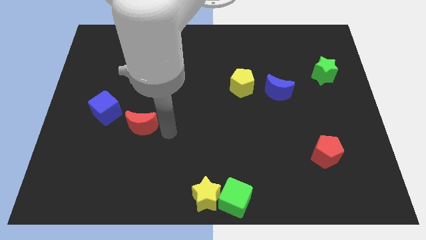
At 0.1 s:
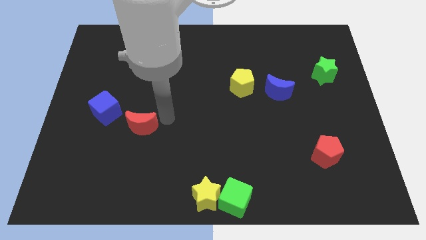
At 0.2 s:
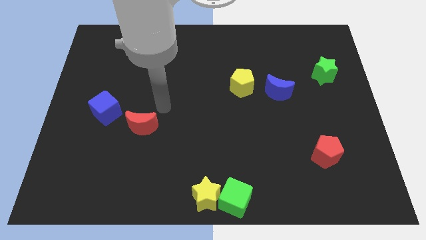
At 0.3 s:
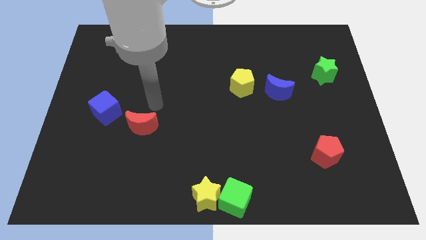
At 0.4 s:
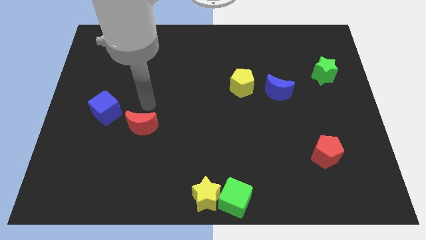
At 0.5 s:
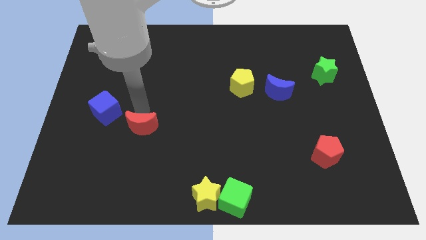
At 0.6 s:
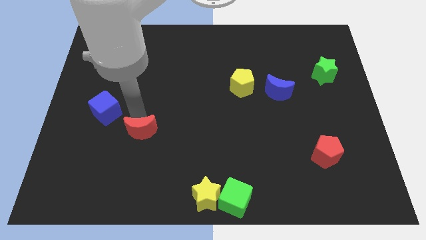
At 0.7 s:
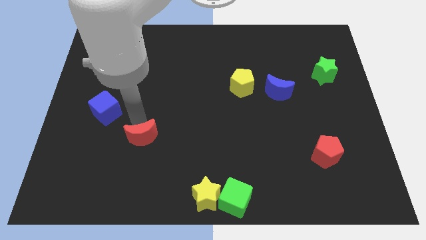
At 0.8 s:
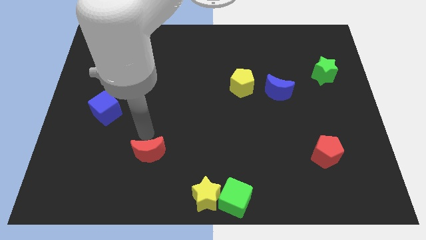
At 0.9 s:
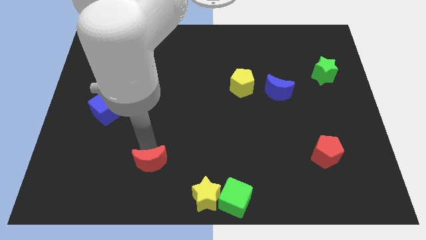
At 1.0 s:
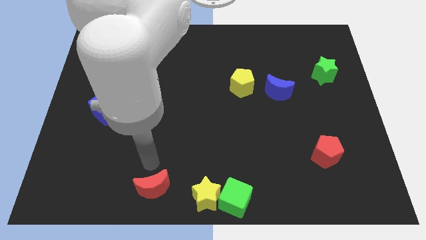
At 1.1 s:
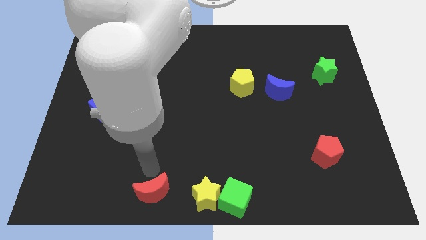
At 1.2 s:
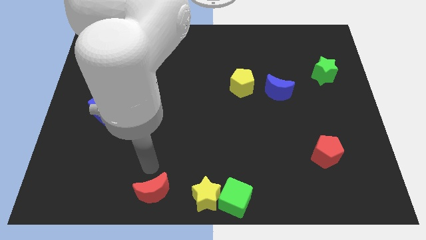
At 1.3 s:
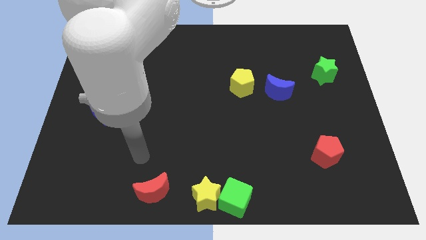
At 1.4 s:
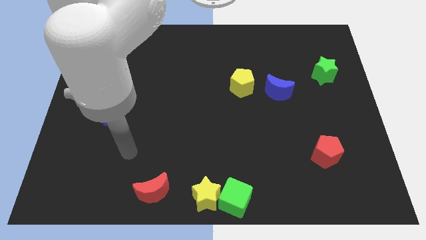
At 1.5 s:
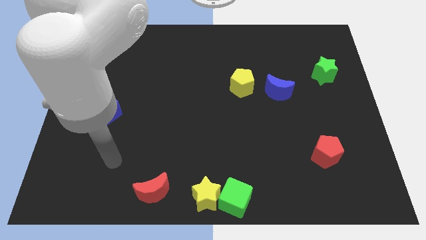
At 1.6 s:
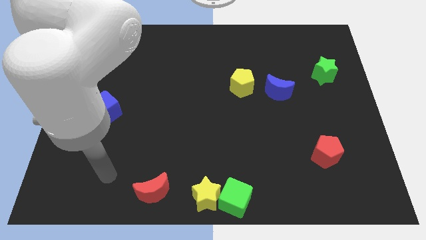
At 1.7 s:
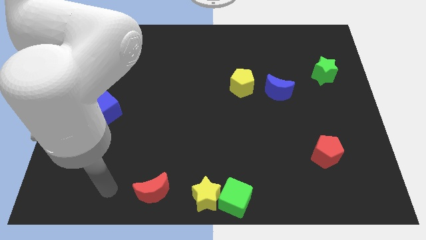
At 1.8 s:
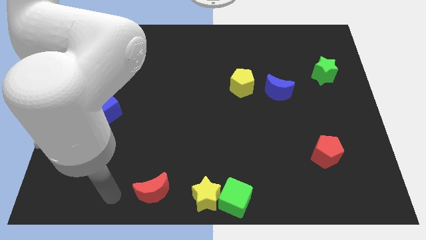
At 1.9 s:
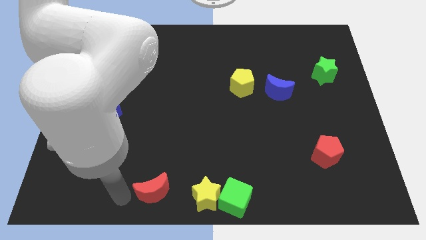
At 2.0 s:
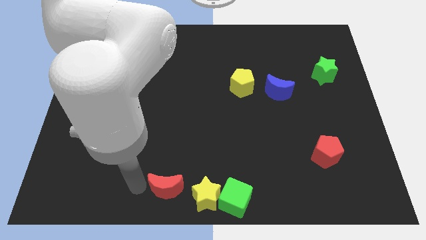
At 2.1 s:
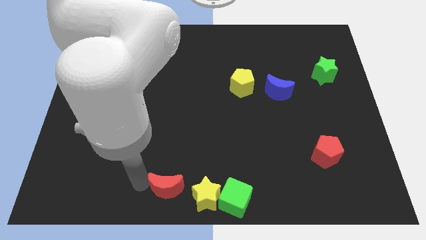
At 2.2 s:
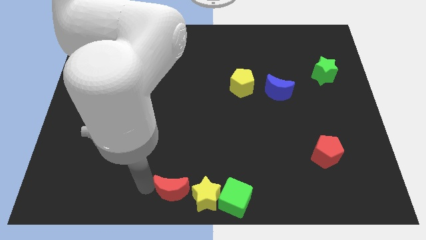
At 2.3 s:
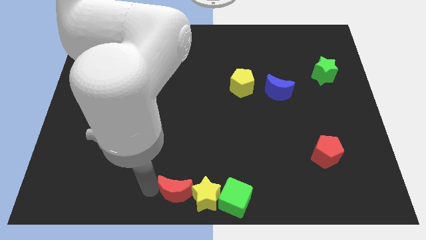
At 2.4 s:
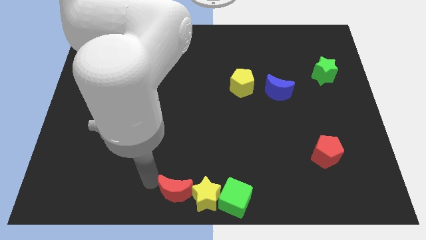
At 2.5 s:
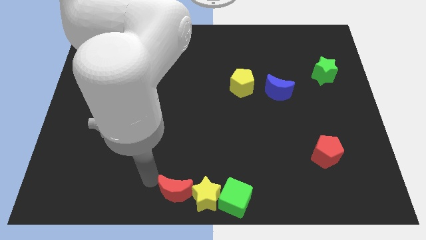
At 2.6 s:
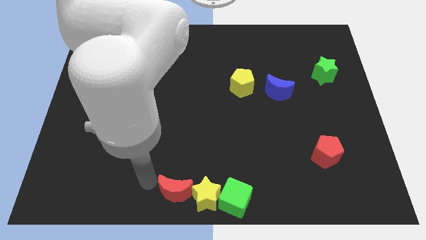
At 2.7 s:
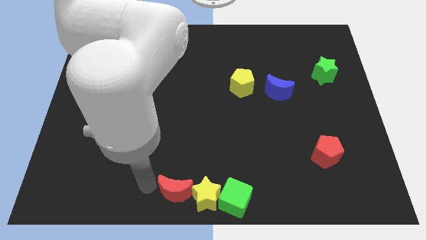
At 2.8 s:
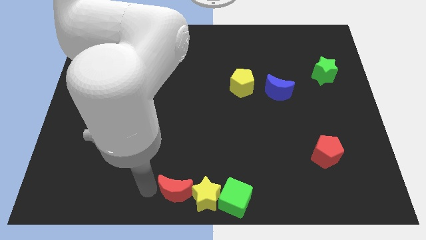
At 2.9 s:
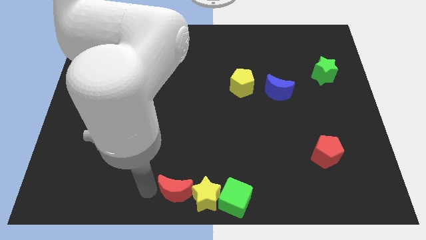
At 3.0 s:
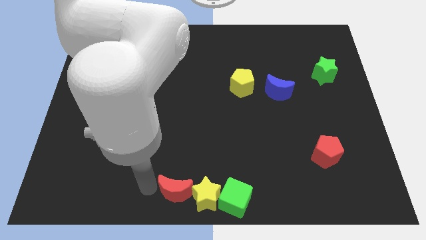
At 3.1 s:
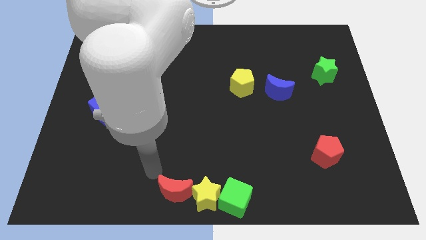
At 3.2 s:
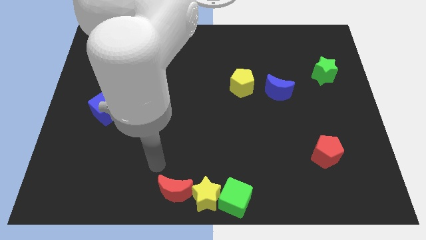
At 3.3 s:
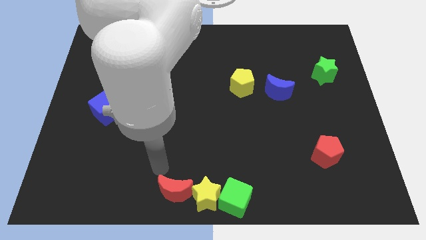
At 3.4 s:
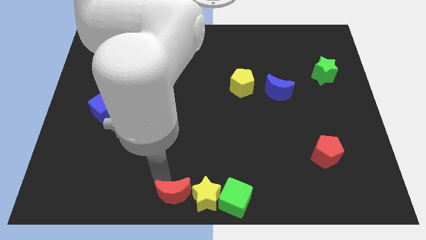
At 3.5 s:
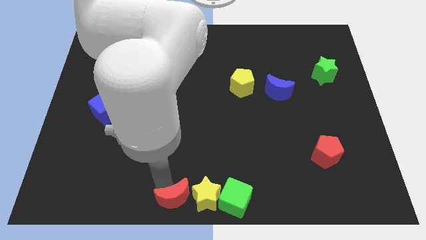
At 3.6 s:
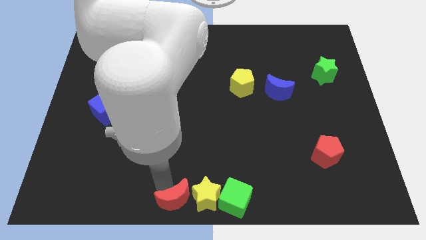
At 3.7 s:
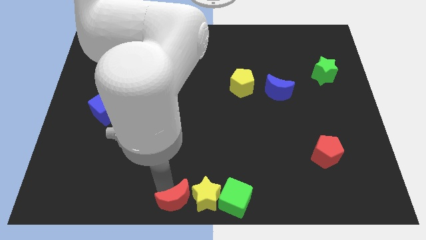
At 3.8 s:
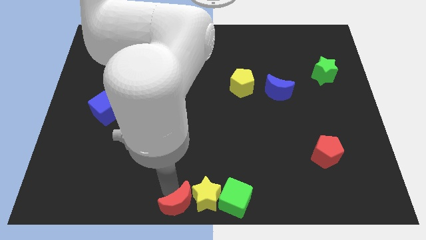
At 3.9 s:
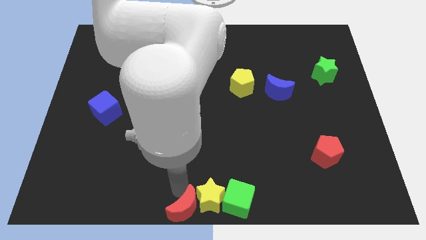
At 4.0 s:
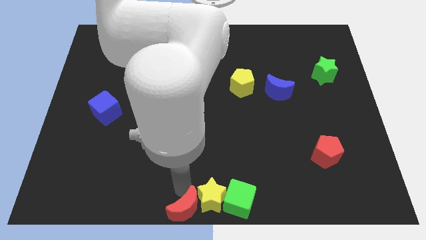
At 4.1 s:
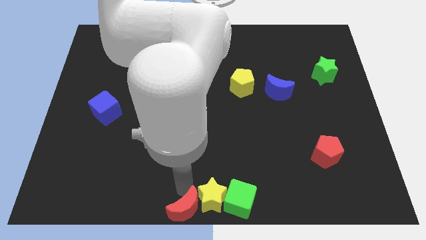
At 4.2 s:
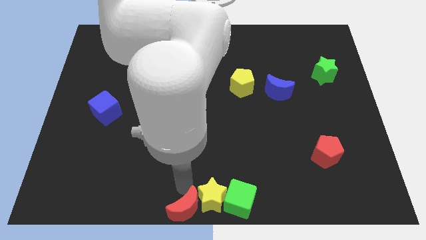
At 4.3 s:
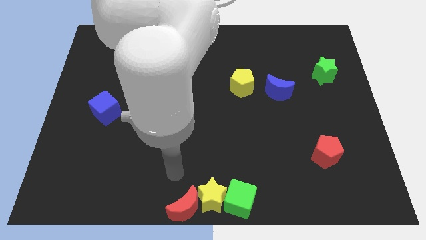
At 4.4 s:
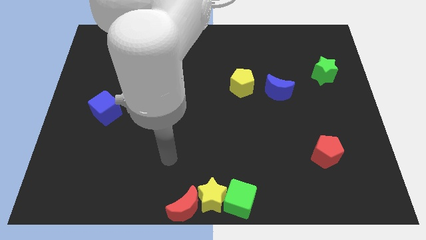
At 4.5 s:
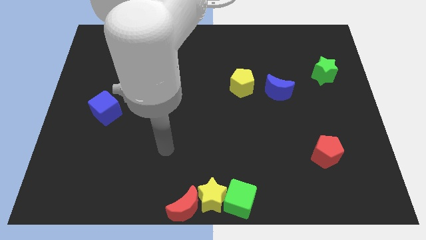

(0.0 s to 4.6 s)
move the red moon into yellow star

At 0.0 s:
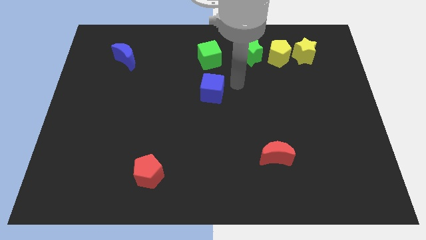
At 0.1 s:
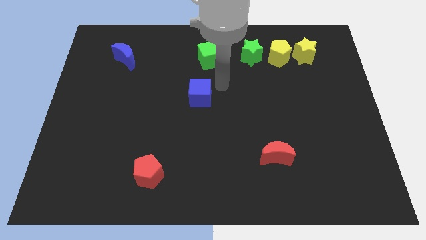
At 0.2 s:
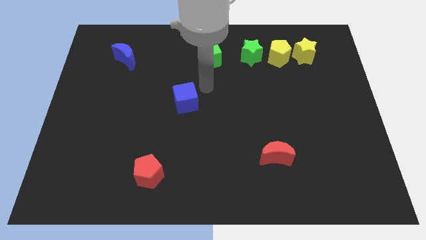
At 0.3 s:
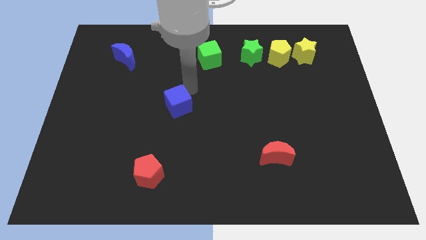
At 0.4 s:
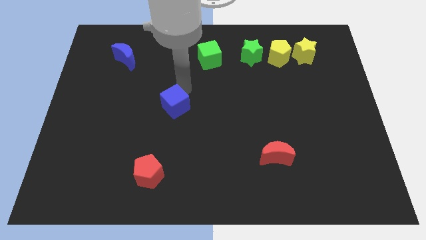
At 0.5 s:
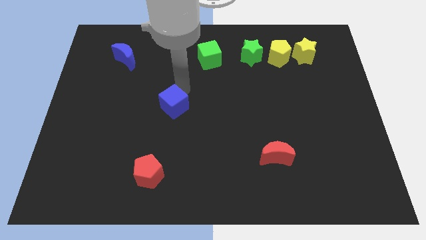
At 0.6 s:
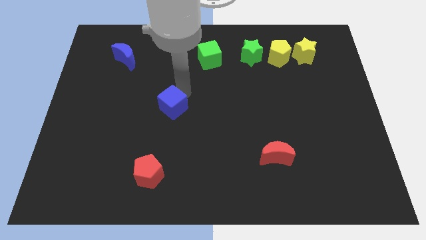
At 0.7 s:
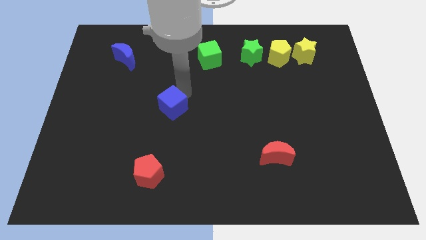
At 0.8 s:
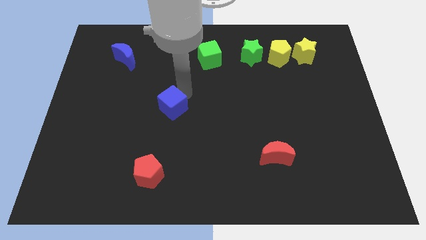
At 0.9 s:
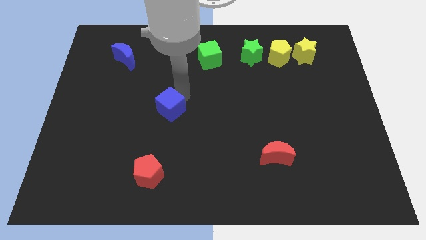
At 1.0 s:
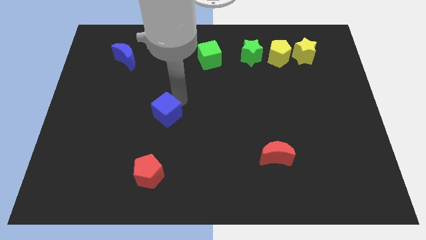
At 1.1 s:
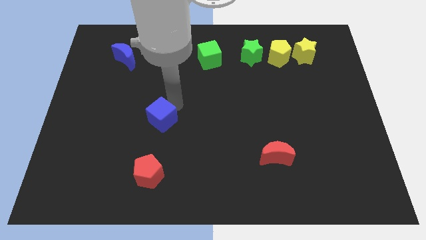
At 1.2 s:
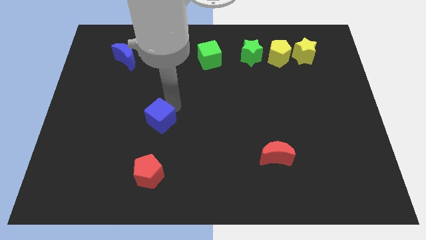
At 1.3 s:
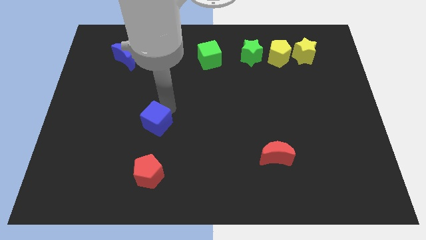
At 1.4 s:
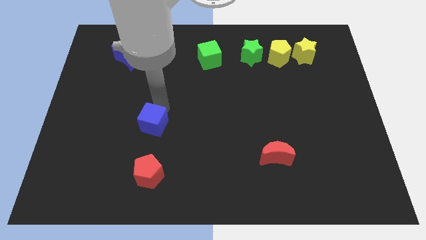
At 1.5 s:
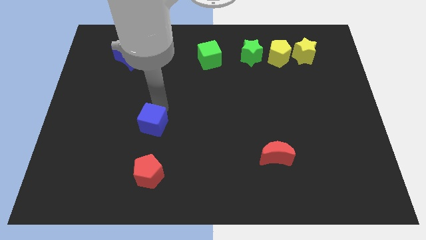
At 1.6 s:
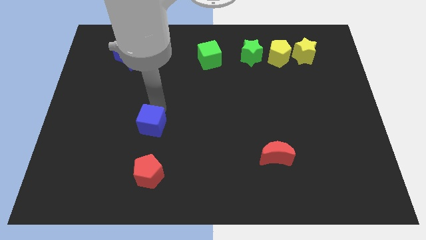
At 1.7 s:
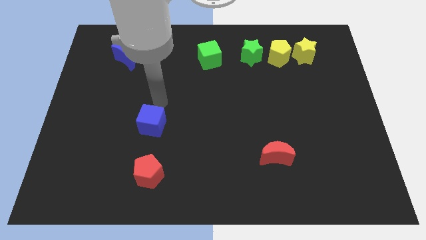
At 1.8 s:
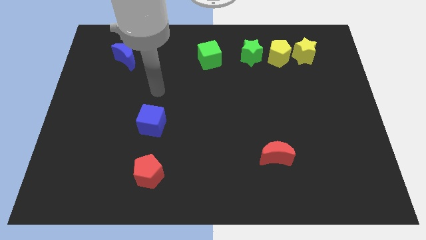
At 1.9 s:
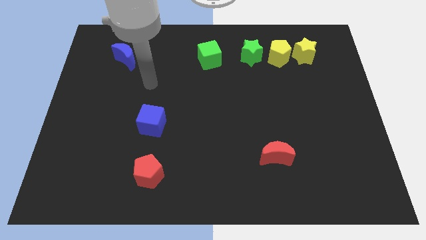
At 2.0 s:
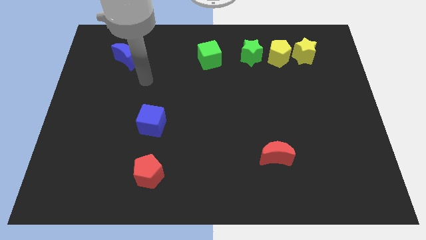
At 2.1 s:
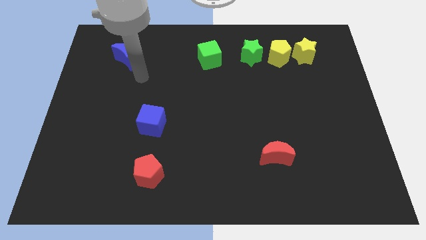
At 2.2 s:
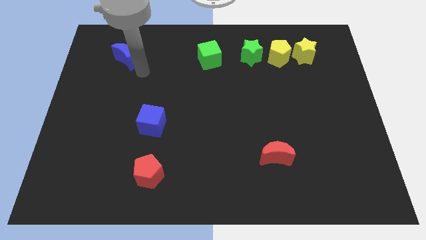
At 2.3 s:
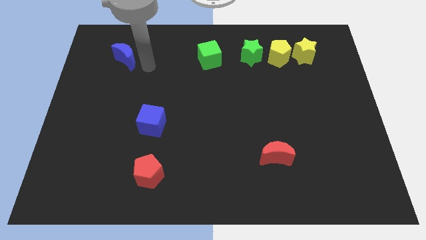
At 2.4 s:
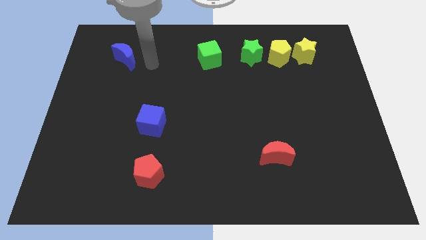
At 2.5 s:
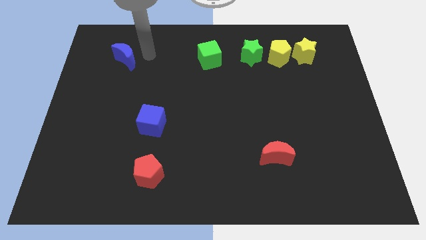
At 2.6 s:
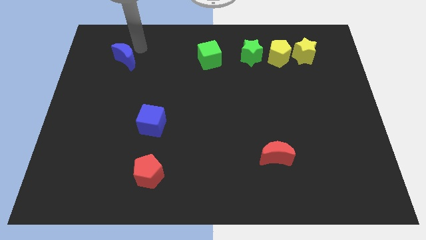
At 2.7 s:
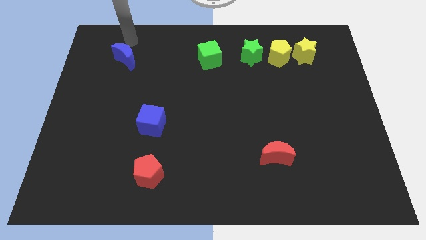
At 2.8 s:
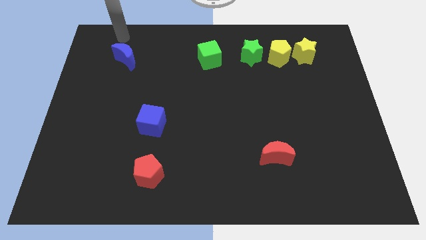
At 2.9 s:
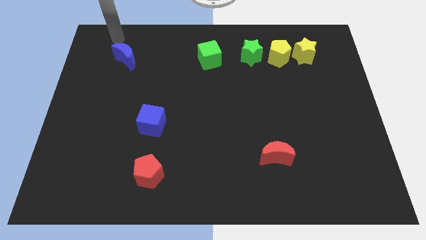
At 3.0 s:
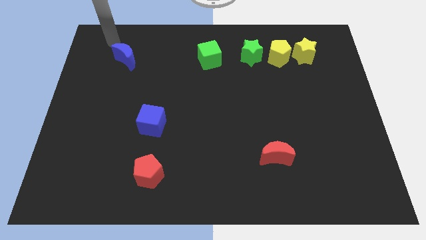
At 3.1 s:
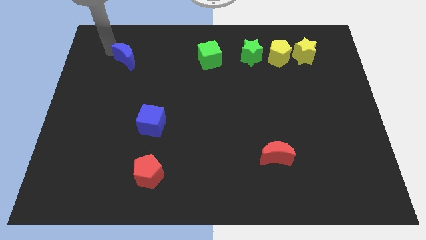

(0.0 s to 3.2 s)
push the blue cube slightly towards bottom

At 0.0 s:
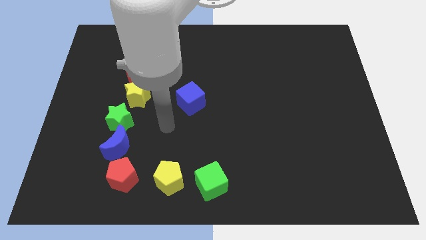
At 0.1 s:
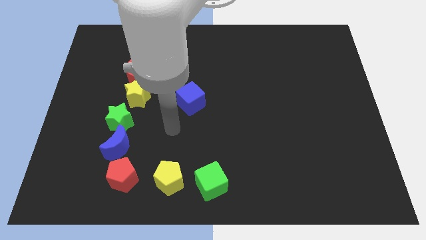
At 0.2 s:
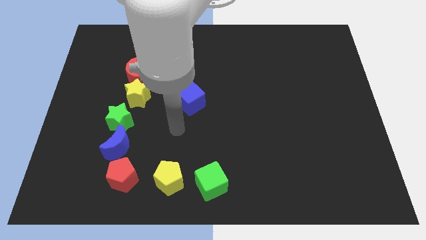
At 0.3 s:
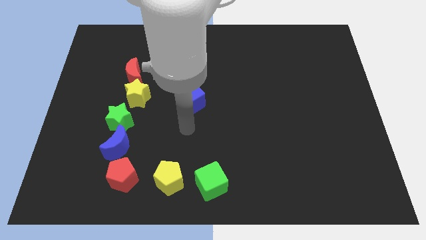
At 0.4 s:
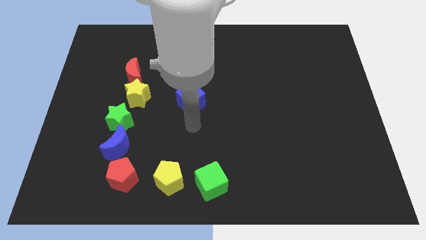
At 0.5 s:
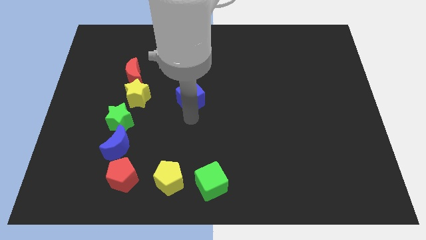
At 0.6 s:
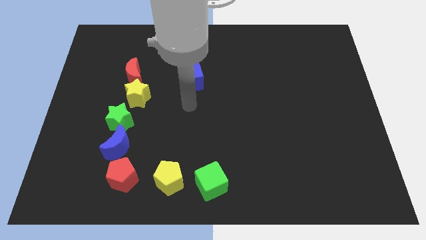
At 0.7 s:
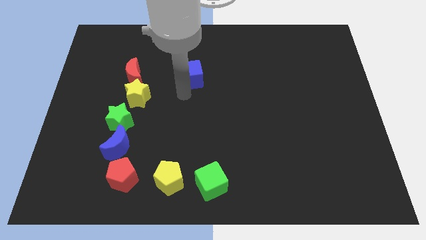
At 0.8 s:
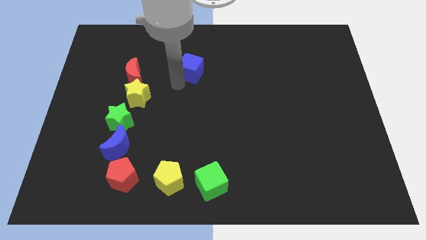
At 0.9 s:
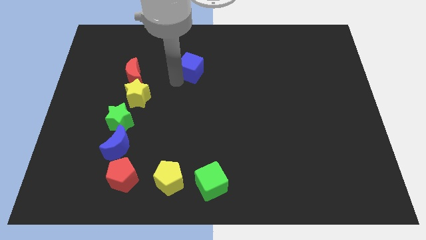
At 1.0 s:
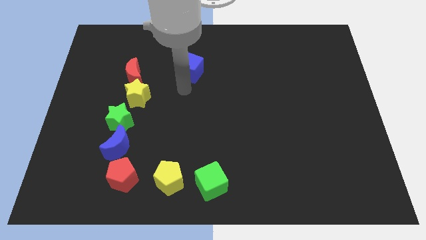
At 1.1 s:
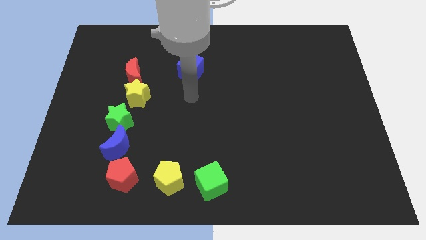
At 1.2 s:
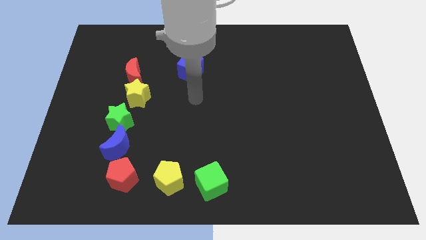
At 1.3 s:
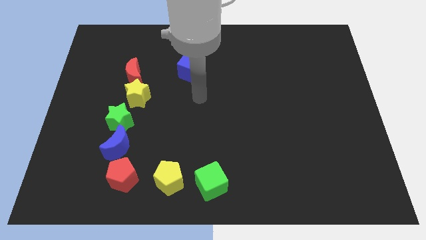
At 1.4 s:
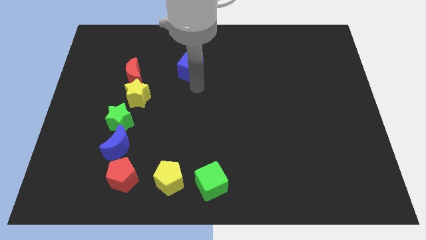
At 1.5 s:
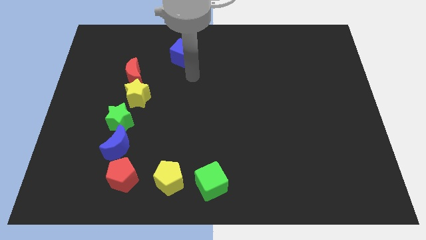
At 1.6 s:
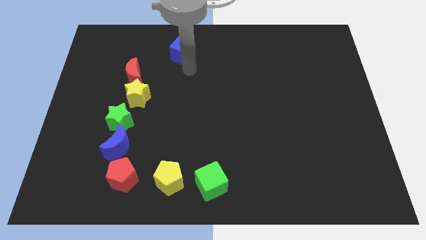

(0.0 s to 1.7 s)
move the blue cube diagonally top right to the yellow star
